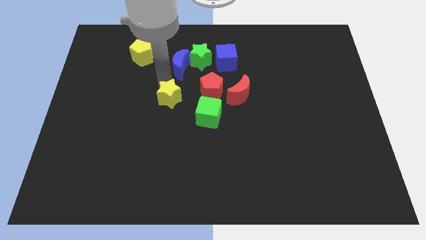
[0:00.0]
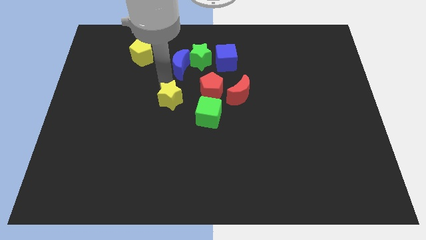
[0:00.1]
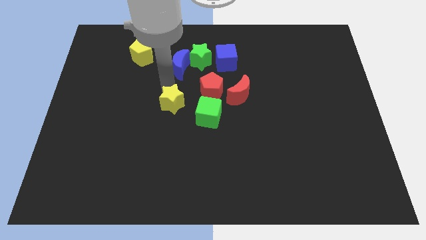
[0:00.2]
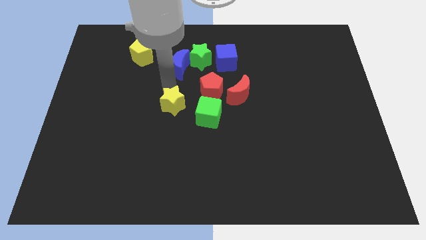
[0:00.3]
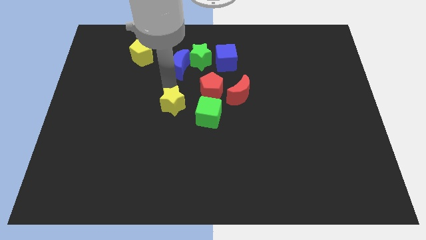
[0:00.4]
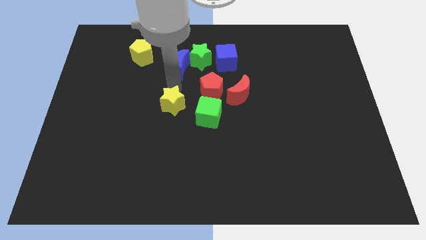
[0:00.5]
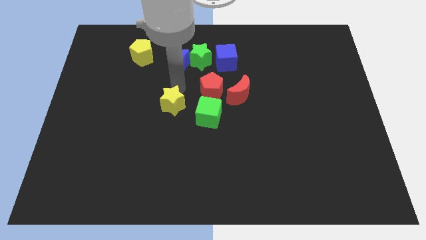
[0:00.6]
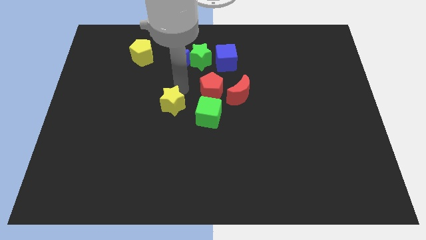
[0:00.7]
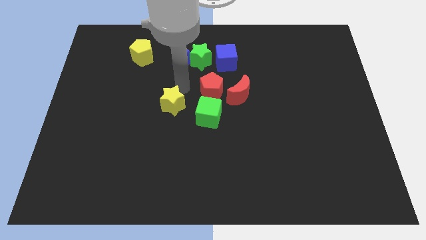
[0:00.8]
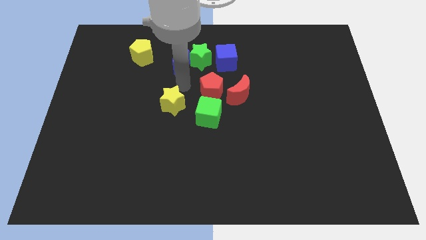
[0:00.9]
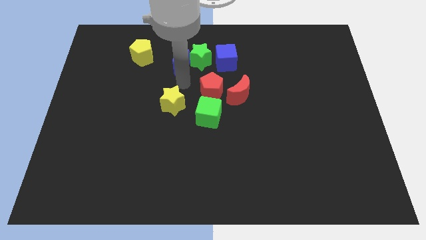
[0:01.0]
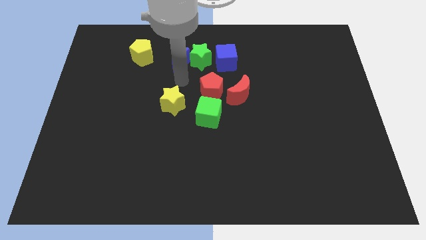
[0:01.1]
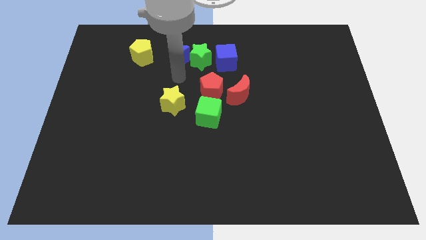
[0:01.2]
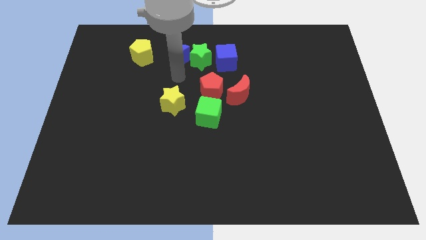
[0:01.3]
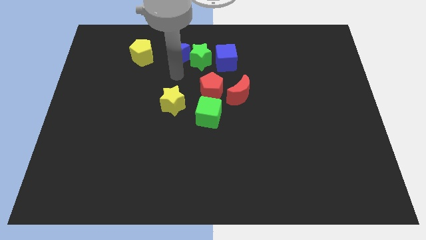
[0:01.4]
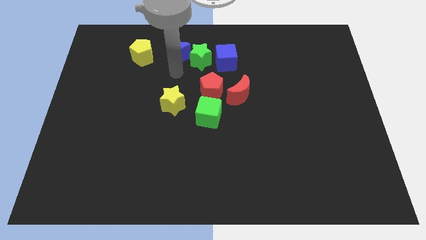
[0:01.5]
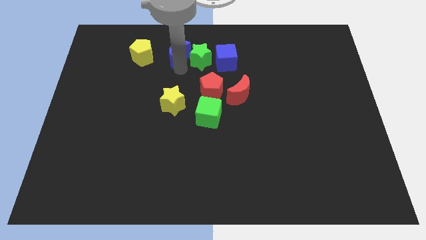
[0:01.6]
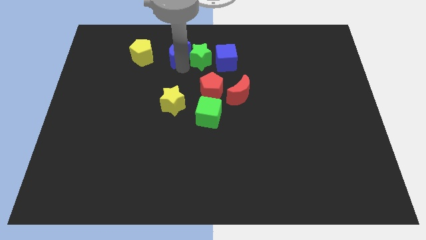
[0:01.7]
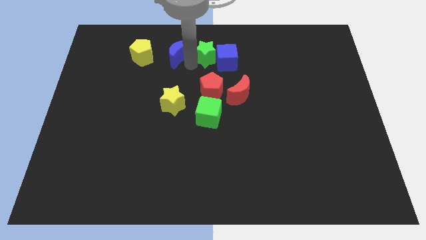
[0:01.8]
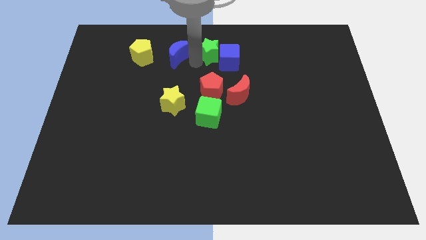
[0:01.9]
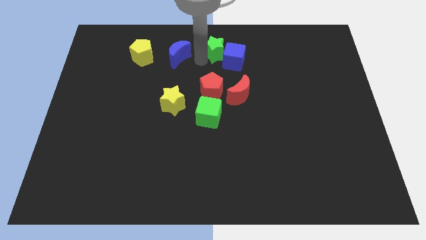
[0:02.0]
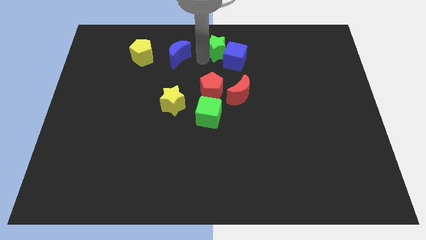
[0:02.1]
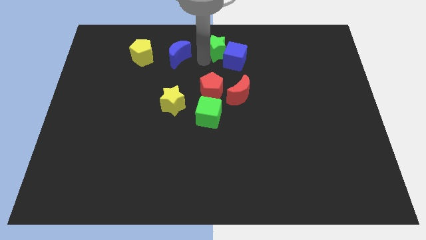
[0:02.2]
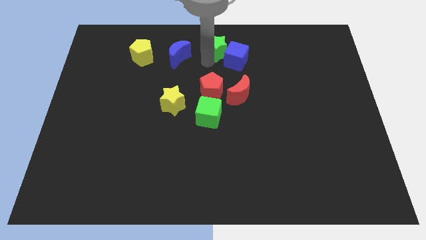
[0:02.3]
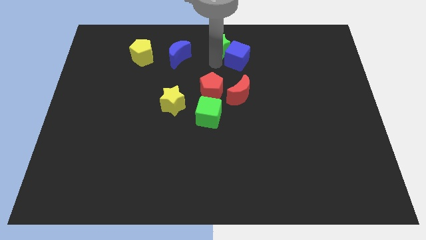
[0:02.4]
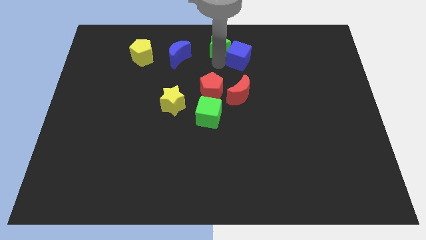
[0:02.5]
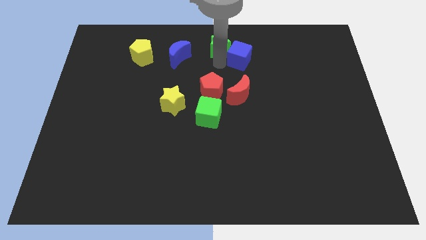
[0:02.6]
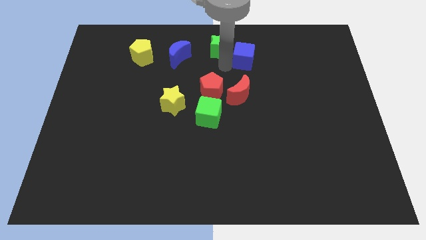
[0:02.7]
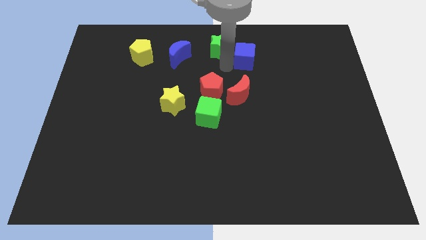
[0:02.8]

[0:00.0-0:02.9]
drag green star towards right side of the board

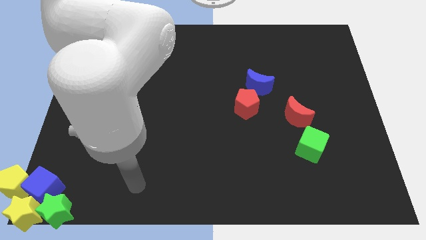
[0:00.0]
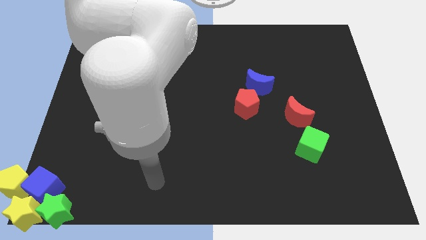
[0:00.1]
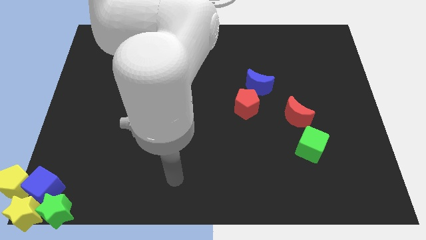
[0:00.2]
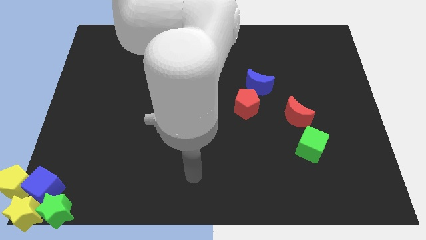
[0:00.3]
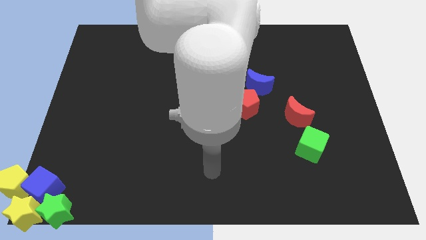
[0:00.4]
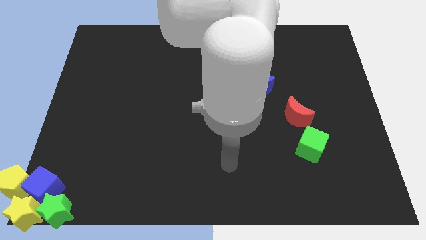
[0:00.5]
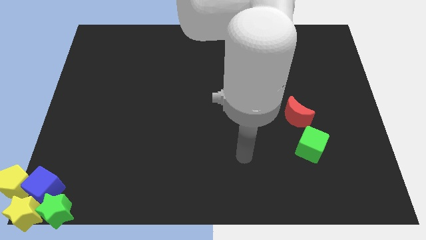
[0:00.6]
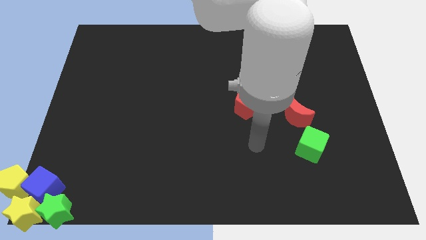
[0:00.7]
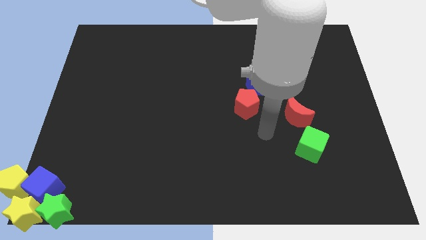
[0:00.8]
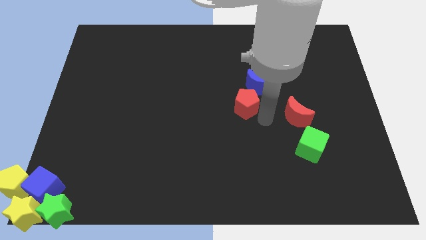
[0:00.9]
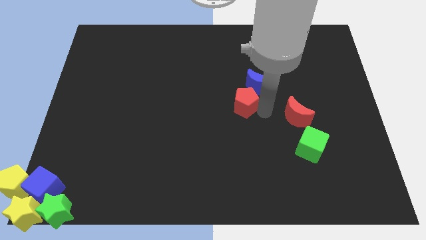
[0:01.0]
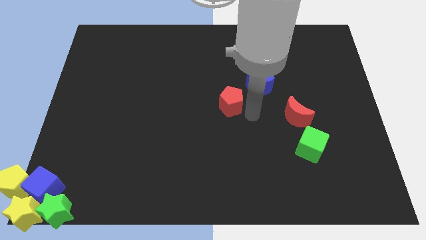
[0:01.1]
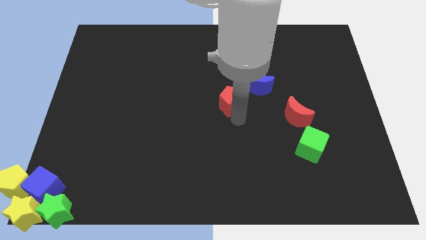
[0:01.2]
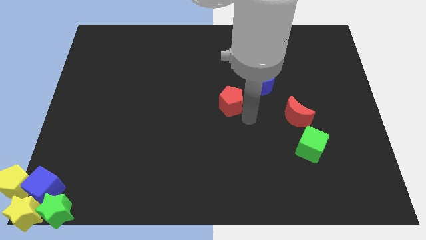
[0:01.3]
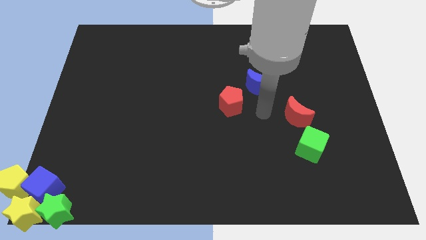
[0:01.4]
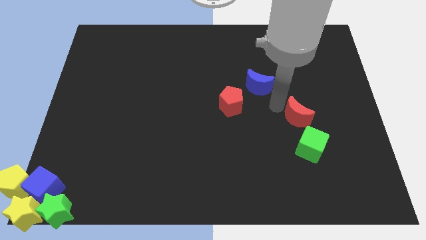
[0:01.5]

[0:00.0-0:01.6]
slightly move the red pentagon to the left of the board

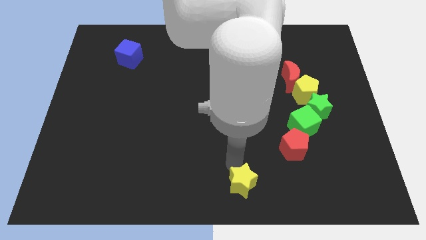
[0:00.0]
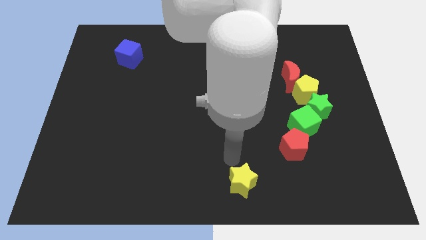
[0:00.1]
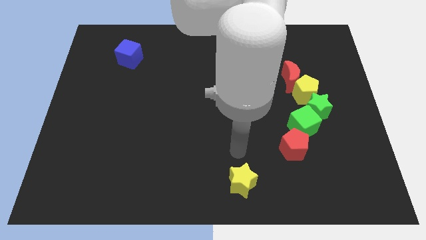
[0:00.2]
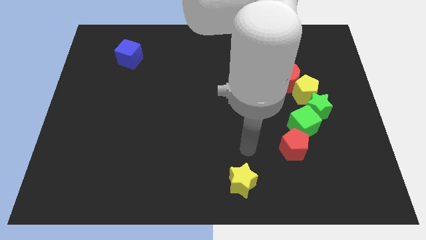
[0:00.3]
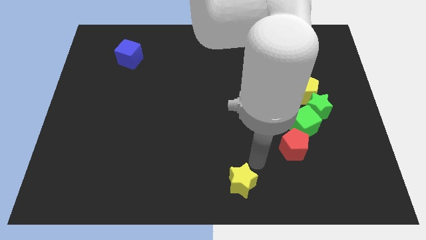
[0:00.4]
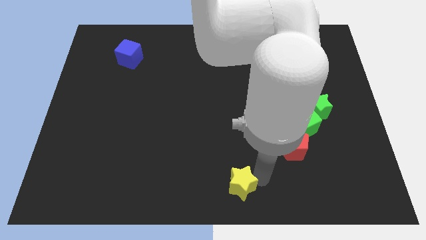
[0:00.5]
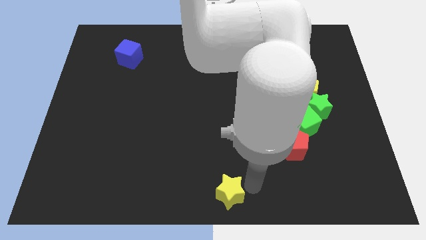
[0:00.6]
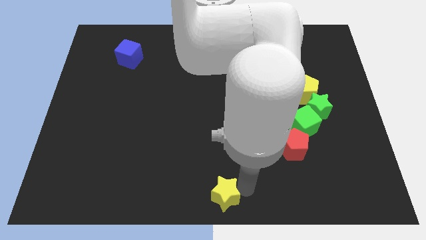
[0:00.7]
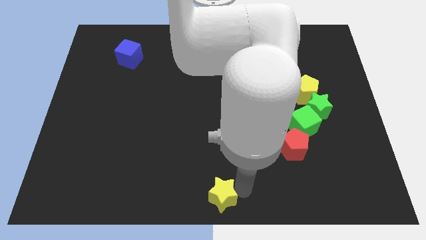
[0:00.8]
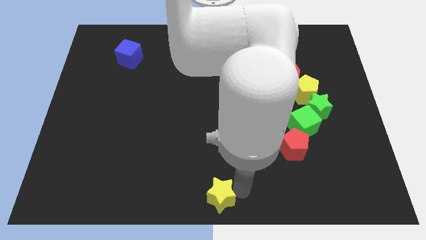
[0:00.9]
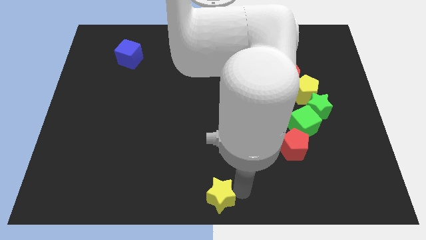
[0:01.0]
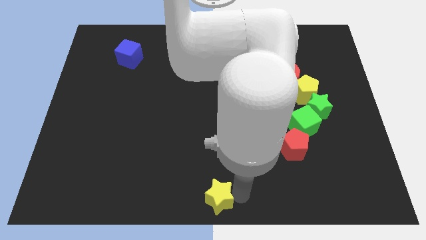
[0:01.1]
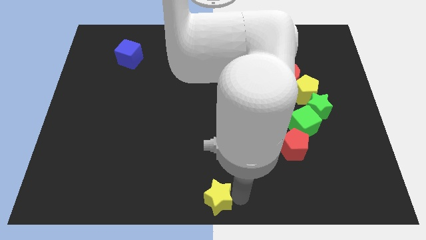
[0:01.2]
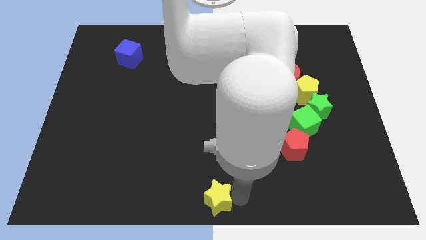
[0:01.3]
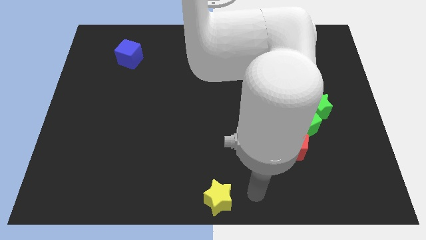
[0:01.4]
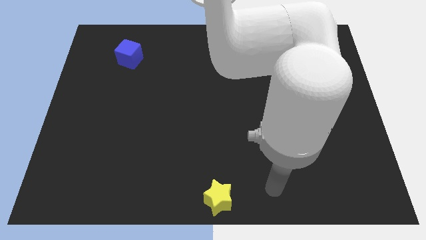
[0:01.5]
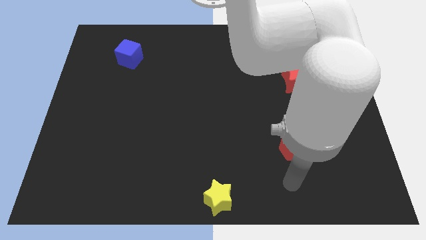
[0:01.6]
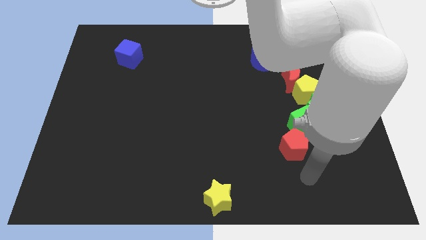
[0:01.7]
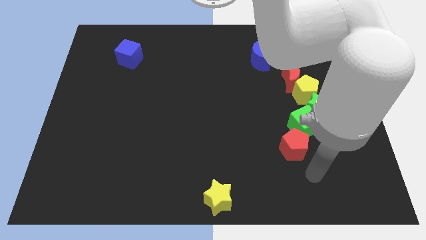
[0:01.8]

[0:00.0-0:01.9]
place the yellow star to the bottom center

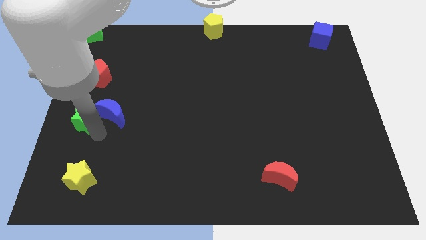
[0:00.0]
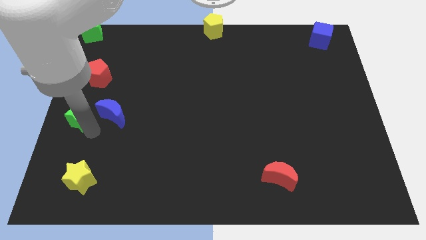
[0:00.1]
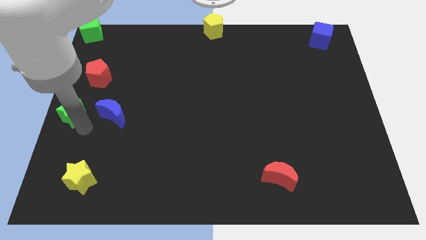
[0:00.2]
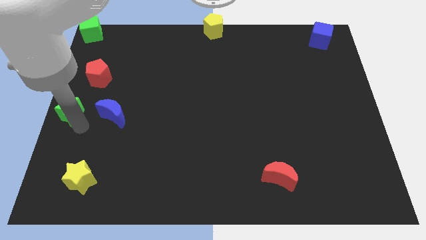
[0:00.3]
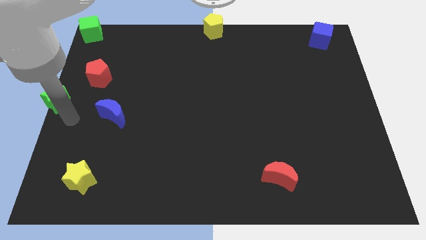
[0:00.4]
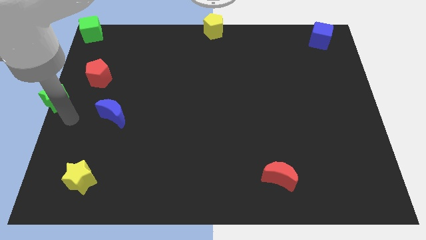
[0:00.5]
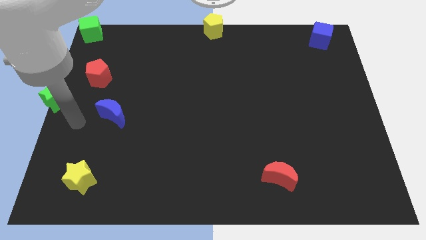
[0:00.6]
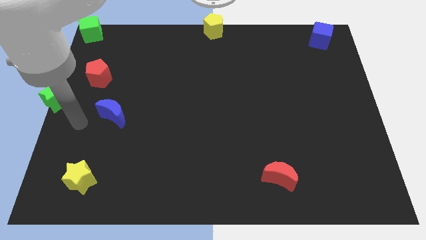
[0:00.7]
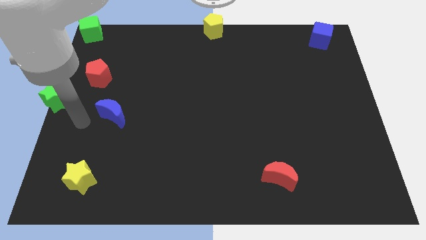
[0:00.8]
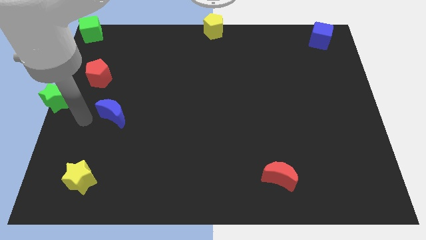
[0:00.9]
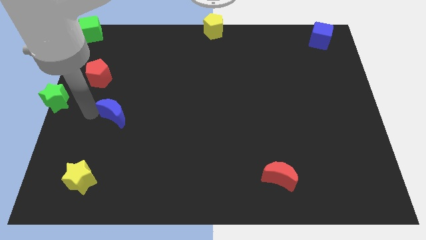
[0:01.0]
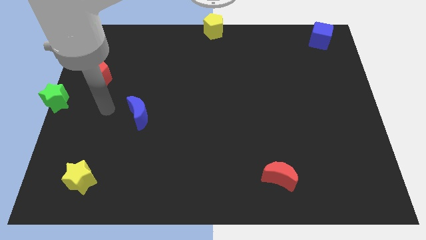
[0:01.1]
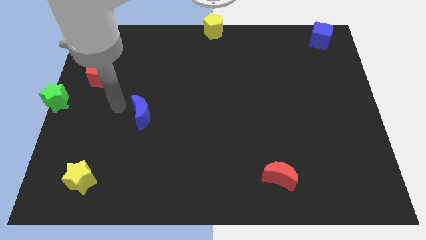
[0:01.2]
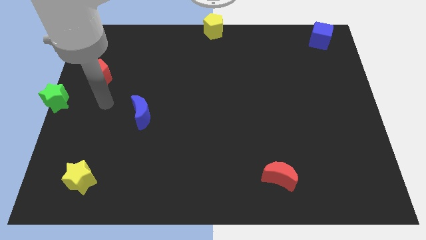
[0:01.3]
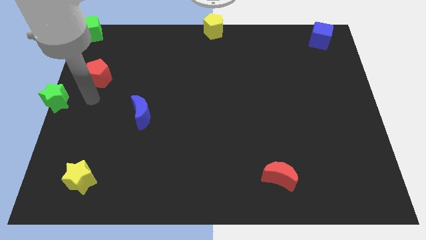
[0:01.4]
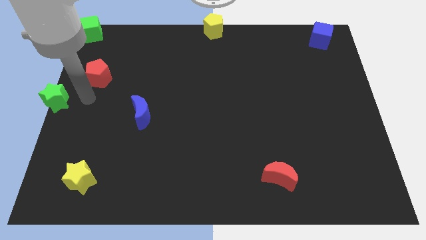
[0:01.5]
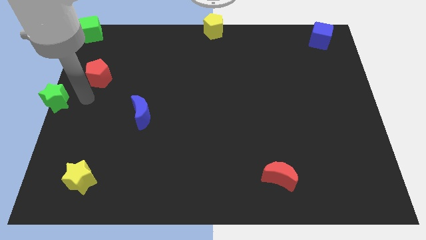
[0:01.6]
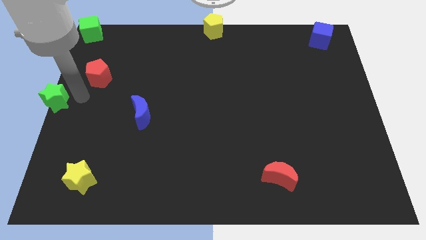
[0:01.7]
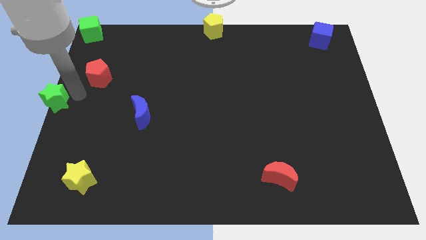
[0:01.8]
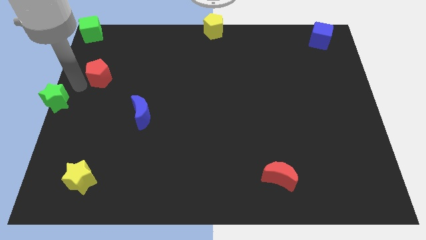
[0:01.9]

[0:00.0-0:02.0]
separate the green star and the blue moon

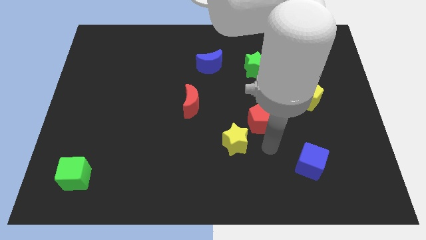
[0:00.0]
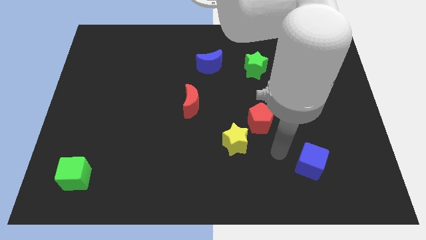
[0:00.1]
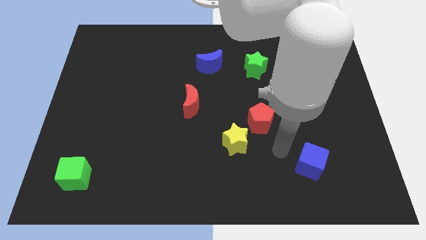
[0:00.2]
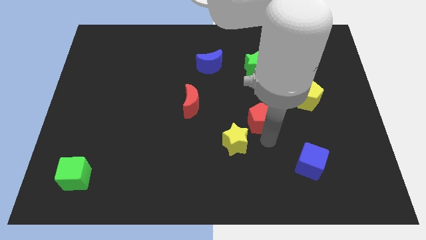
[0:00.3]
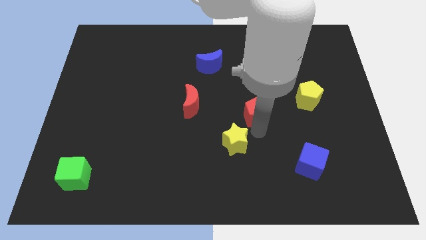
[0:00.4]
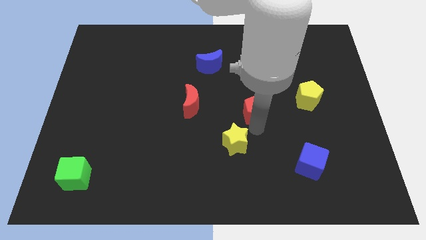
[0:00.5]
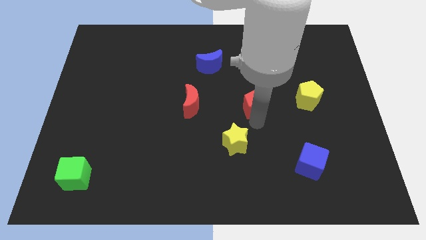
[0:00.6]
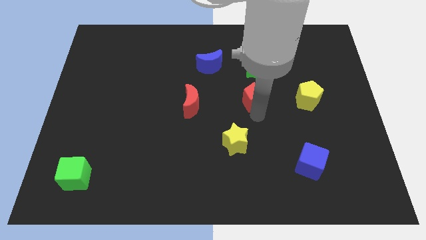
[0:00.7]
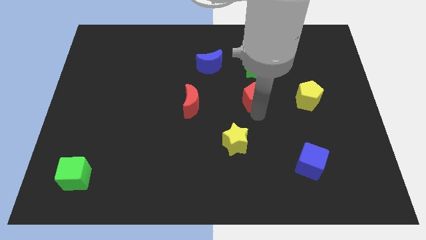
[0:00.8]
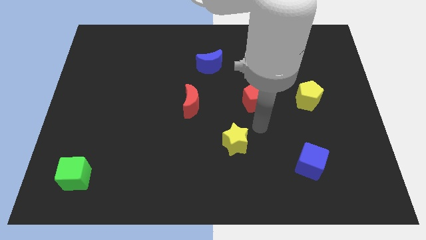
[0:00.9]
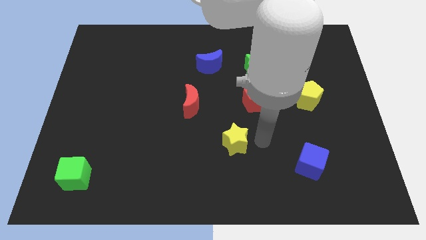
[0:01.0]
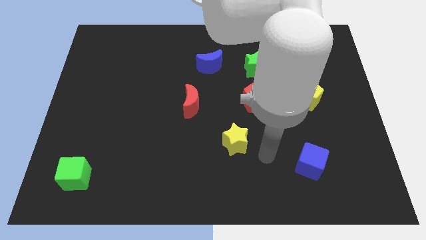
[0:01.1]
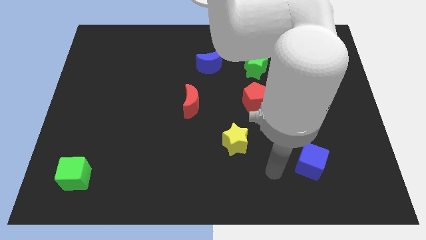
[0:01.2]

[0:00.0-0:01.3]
move the red pentagon below the green star
